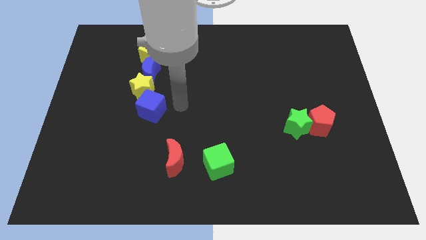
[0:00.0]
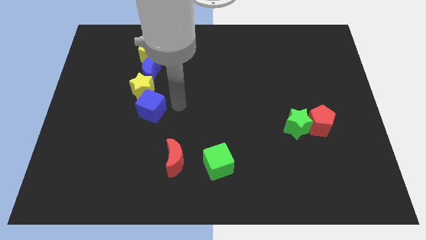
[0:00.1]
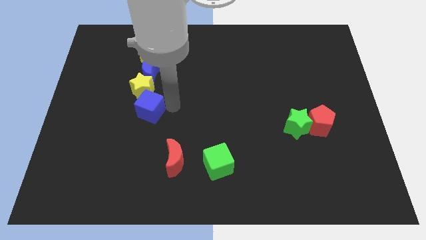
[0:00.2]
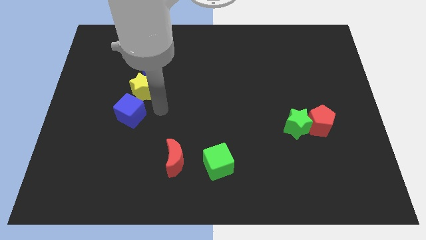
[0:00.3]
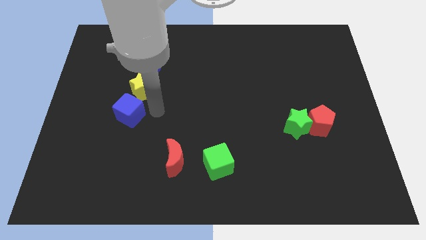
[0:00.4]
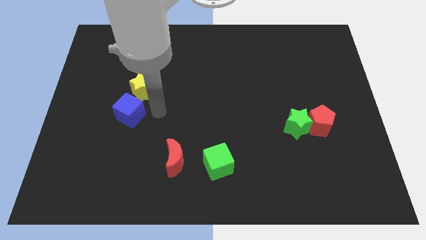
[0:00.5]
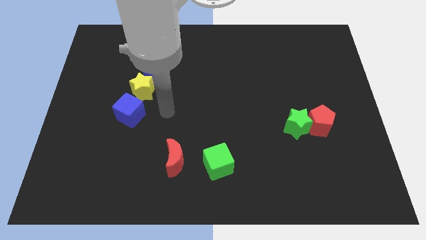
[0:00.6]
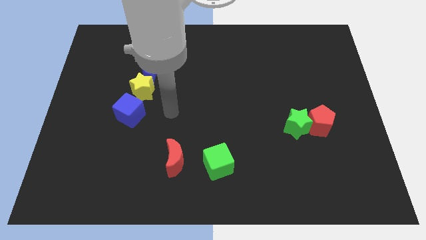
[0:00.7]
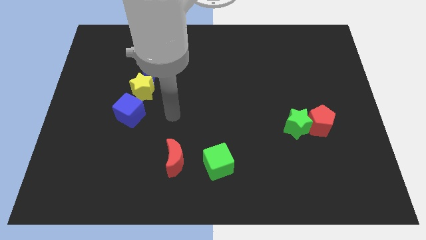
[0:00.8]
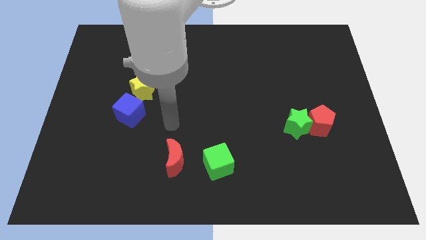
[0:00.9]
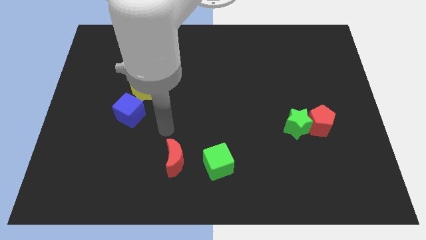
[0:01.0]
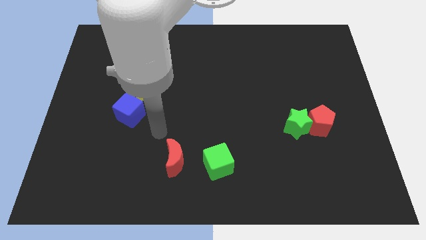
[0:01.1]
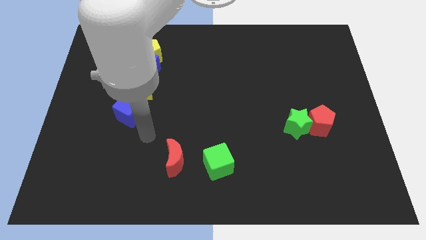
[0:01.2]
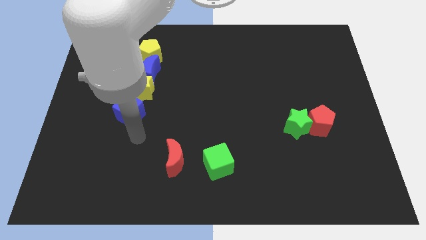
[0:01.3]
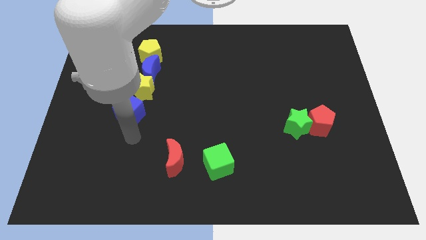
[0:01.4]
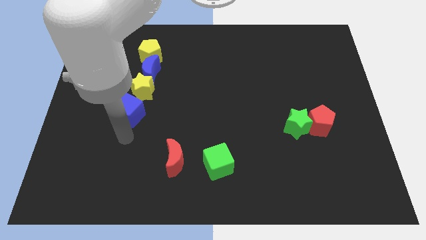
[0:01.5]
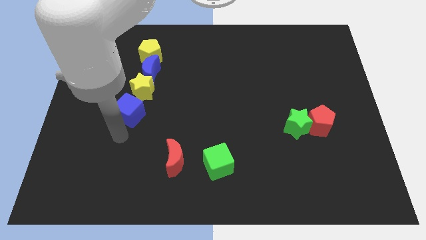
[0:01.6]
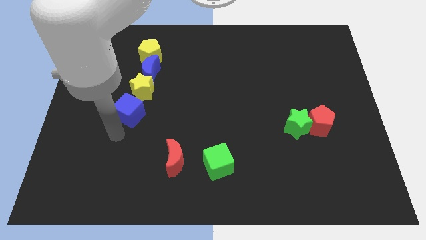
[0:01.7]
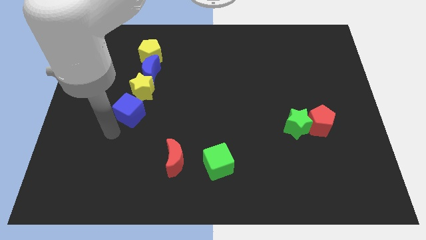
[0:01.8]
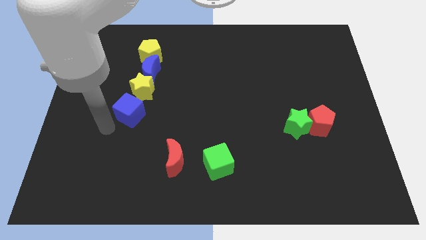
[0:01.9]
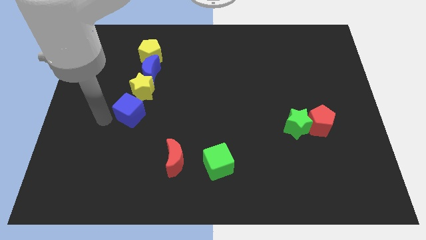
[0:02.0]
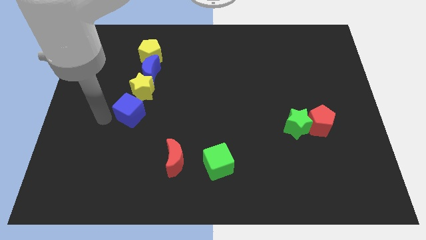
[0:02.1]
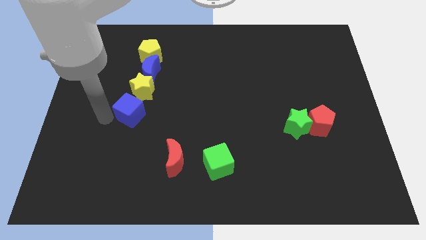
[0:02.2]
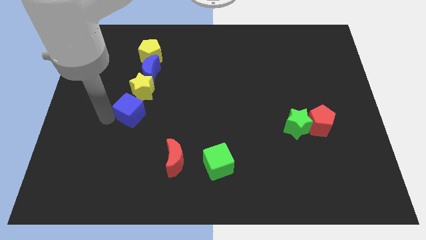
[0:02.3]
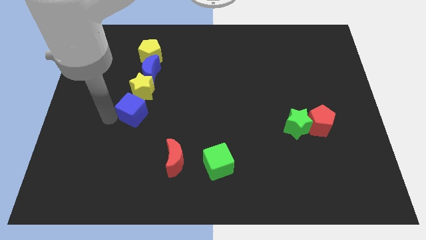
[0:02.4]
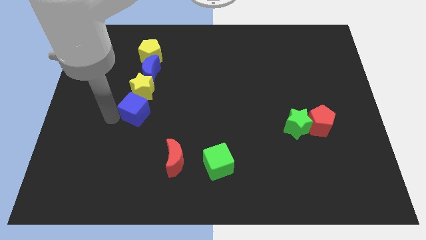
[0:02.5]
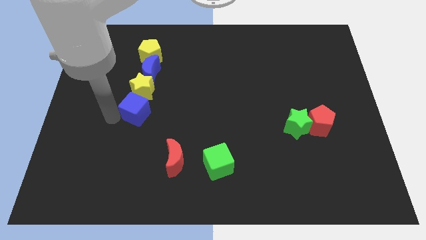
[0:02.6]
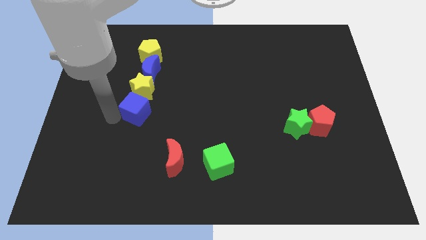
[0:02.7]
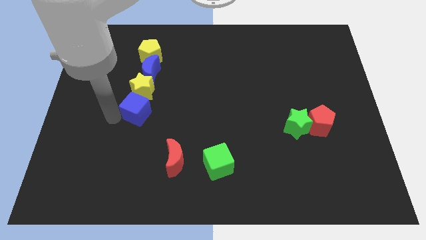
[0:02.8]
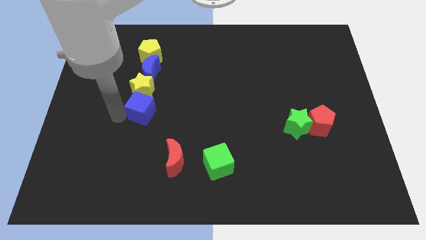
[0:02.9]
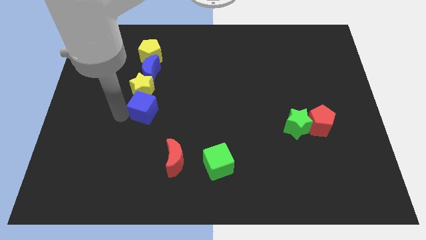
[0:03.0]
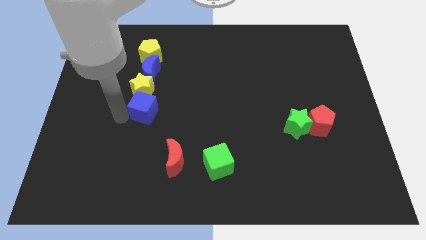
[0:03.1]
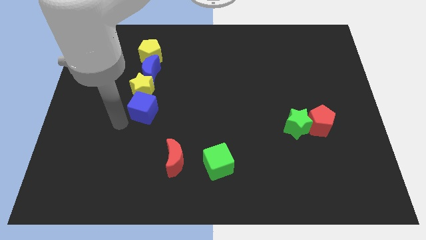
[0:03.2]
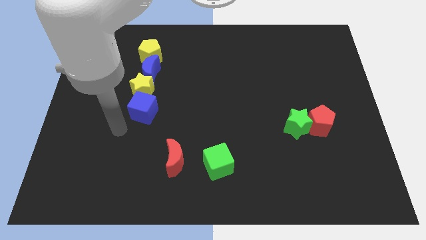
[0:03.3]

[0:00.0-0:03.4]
push the blue cube vertically below to the yellow star

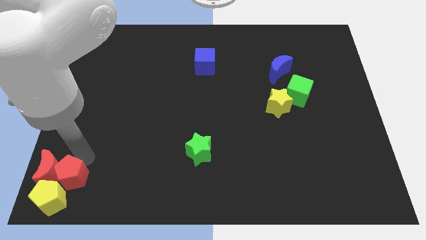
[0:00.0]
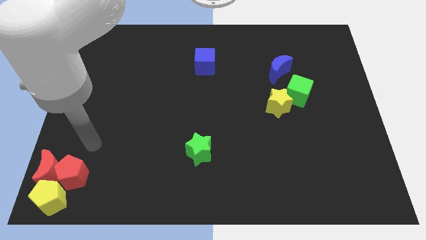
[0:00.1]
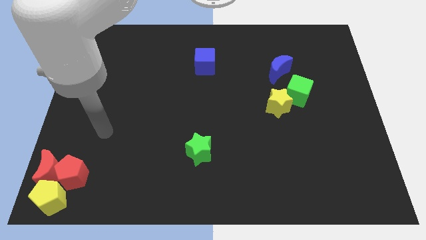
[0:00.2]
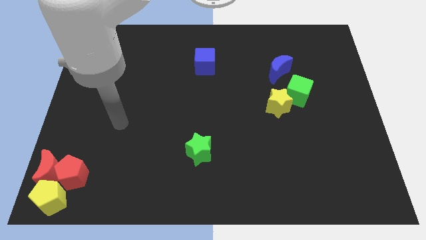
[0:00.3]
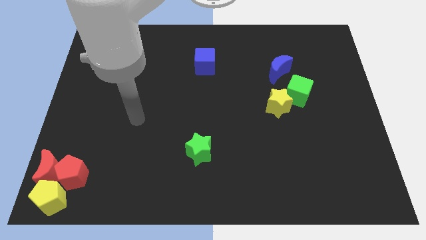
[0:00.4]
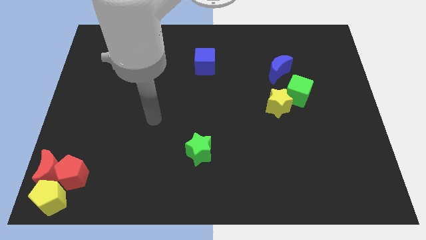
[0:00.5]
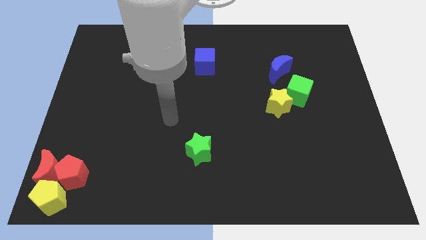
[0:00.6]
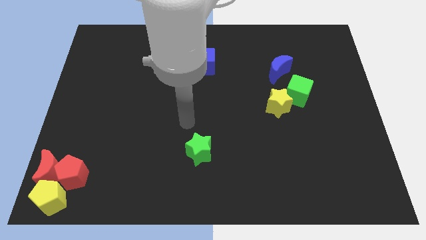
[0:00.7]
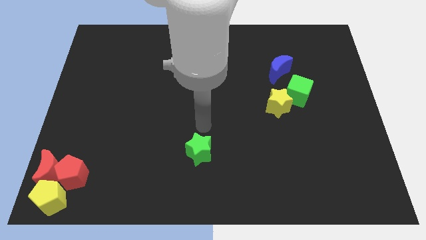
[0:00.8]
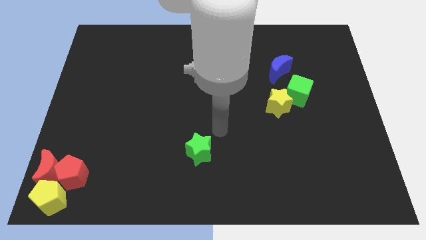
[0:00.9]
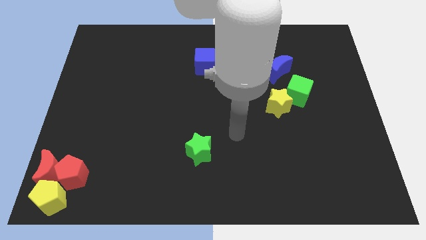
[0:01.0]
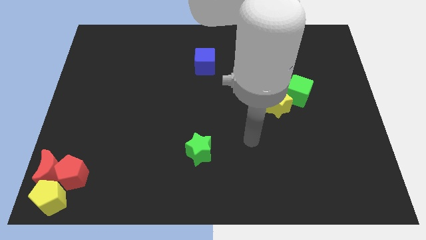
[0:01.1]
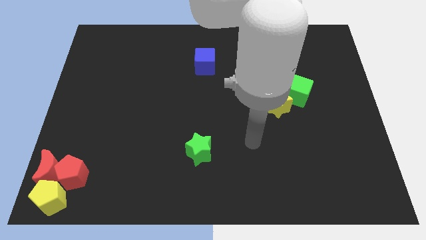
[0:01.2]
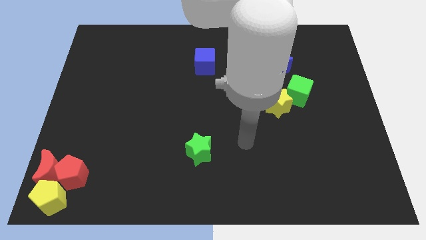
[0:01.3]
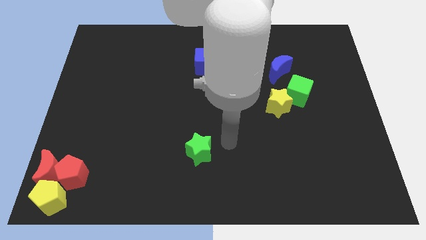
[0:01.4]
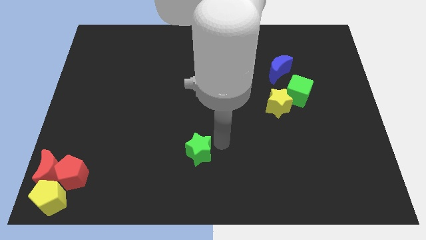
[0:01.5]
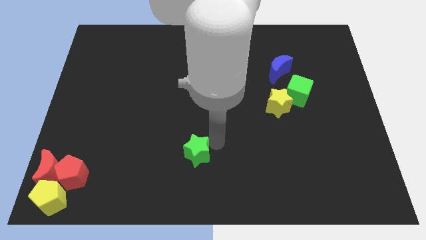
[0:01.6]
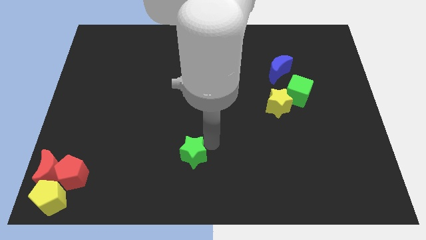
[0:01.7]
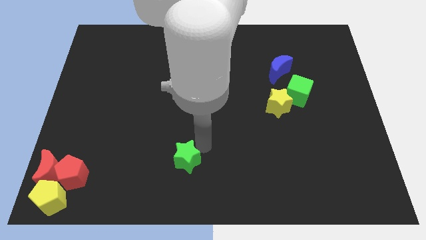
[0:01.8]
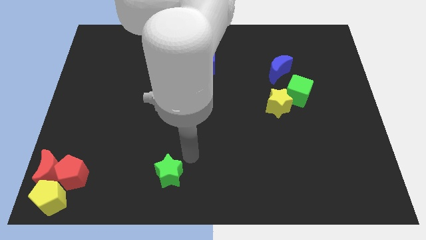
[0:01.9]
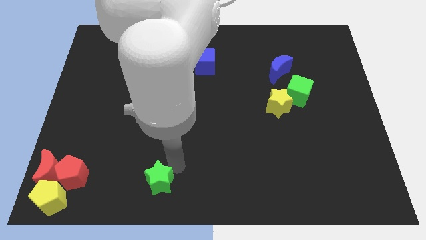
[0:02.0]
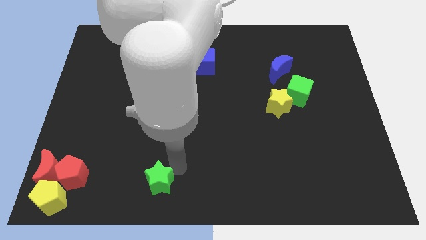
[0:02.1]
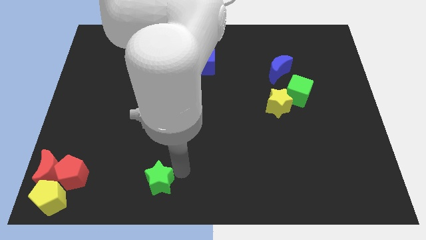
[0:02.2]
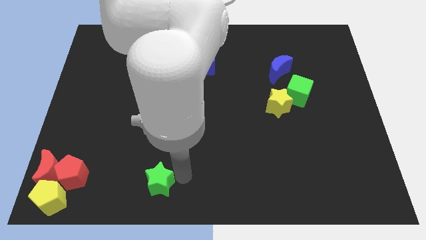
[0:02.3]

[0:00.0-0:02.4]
move the green star bottom left

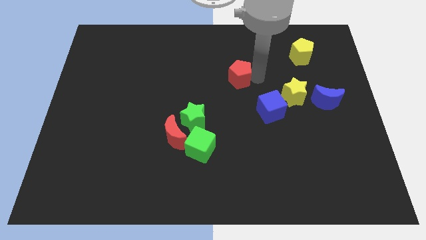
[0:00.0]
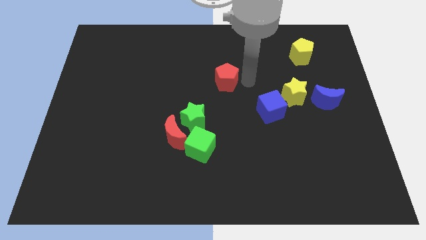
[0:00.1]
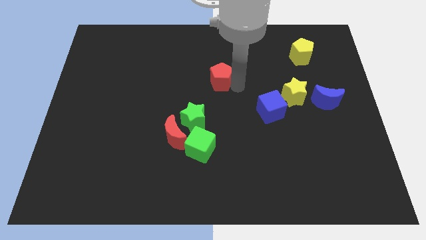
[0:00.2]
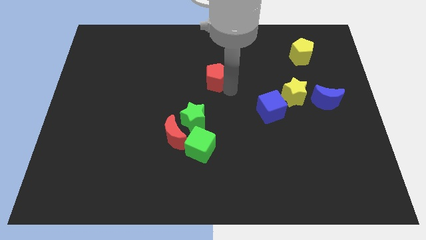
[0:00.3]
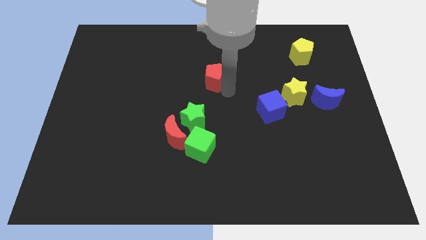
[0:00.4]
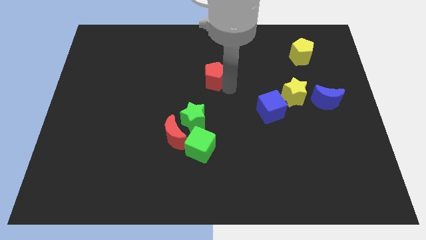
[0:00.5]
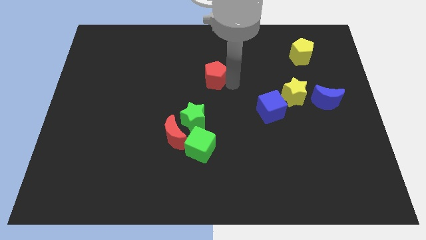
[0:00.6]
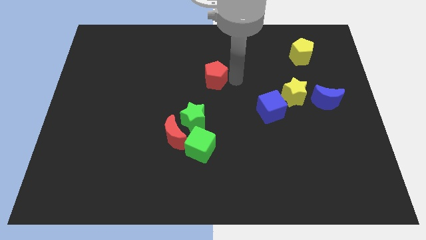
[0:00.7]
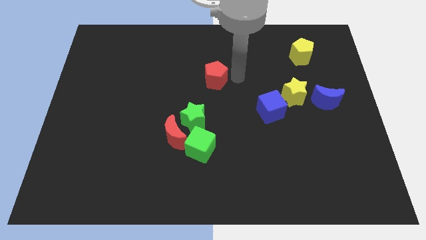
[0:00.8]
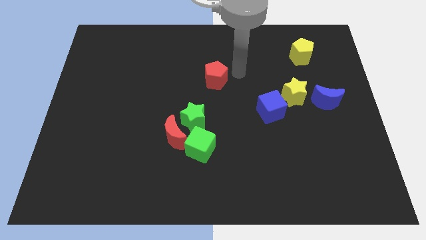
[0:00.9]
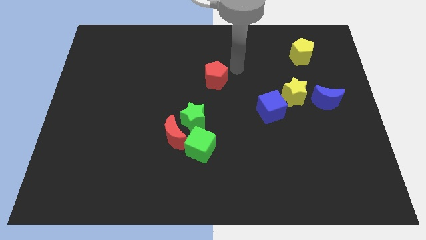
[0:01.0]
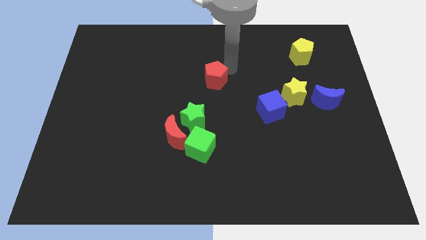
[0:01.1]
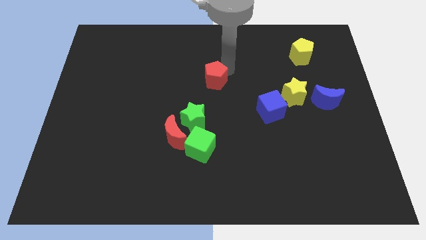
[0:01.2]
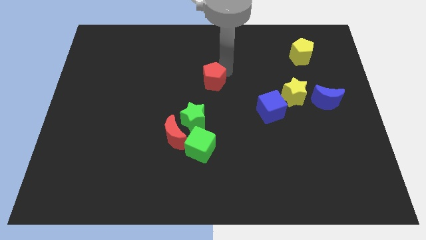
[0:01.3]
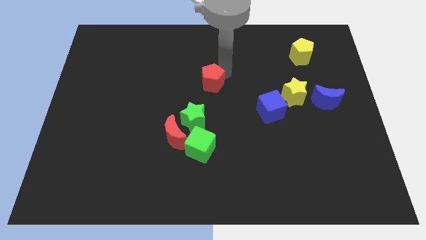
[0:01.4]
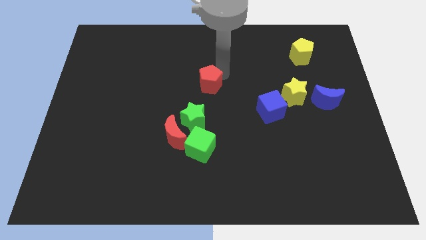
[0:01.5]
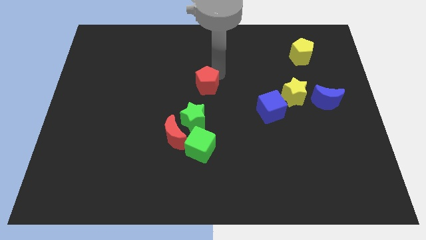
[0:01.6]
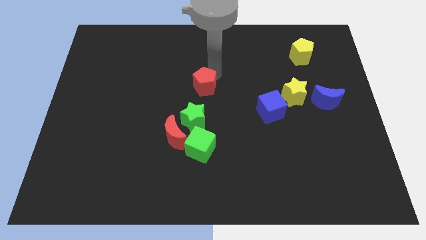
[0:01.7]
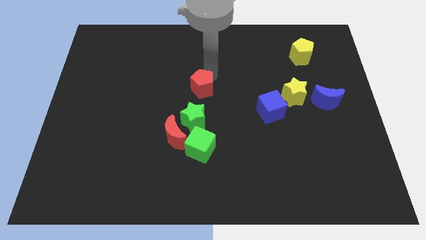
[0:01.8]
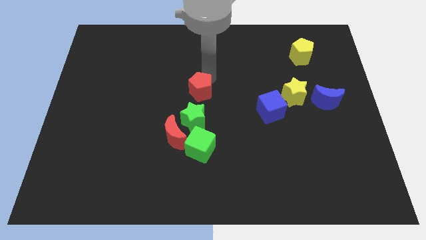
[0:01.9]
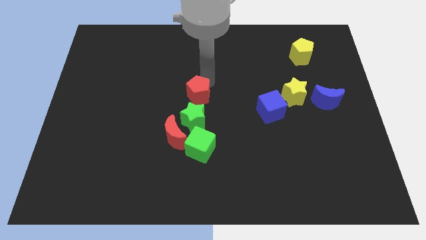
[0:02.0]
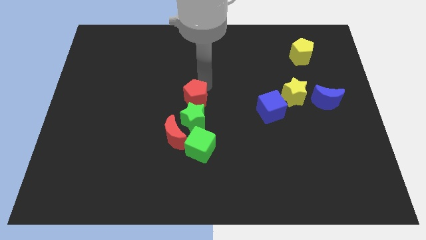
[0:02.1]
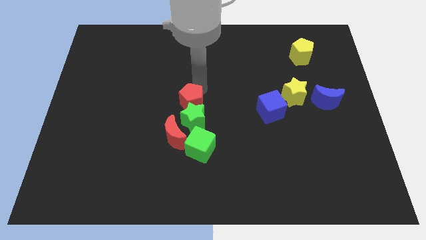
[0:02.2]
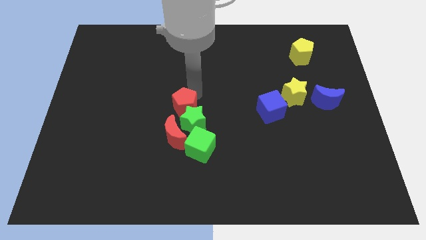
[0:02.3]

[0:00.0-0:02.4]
place the red pentagon at the top of green star

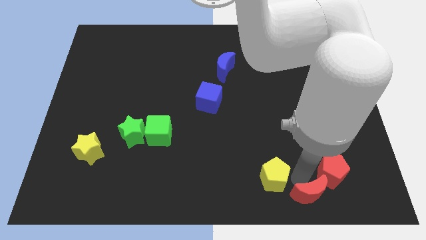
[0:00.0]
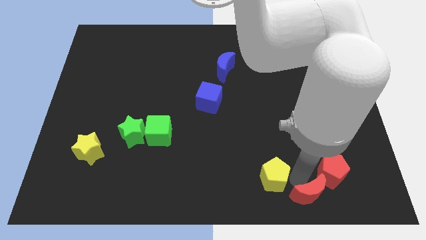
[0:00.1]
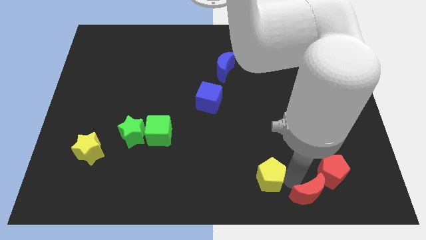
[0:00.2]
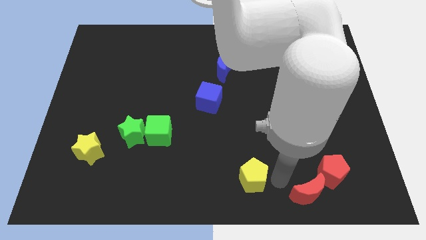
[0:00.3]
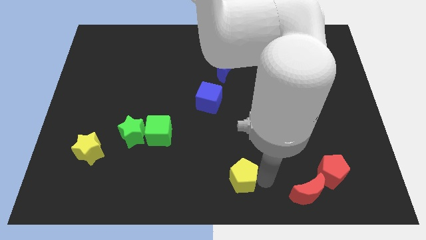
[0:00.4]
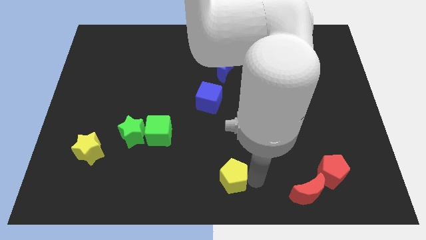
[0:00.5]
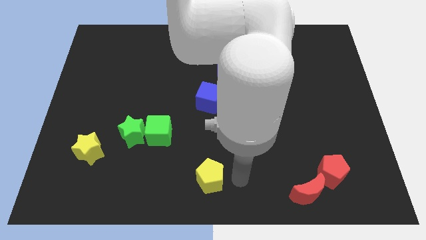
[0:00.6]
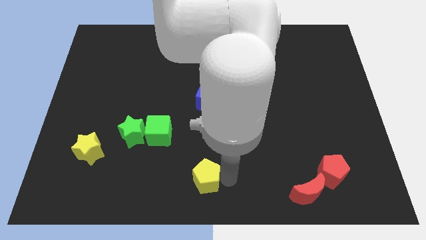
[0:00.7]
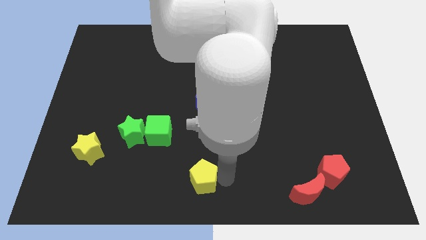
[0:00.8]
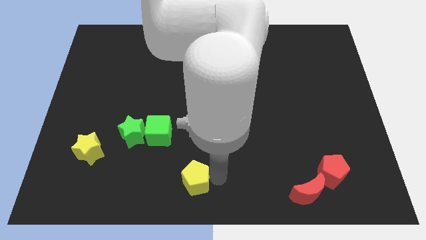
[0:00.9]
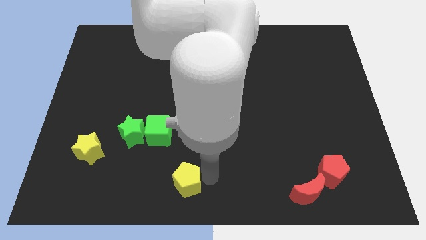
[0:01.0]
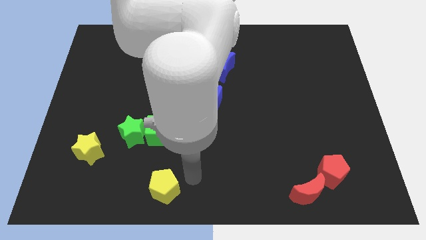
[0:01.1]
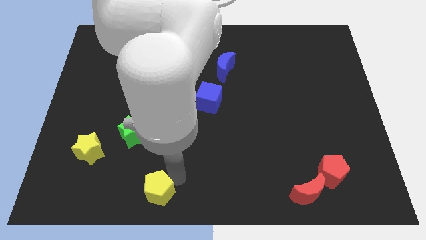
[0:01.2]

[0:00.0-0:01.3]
move the yellow pentagon vertically below the green cube
